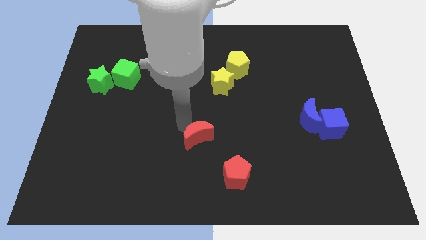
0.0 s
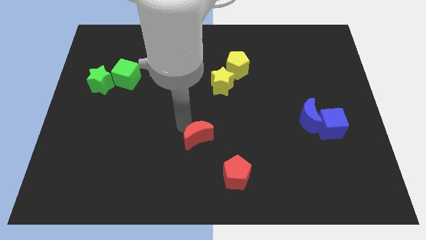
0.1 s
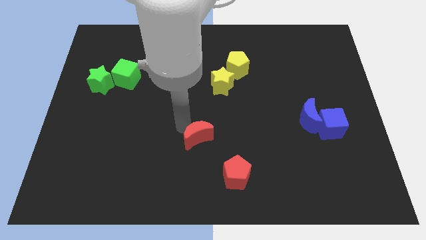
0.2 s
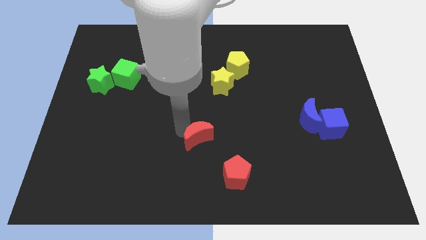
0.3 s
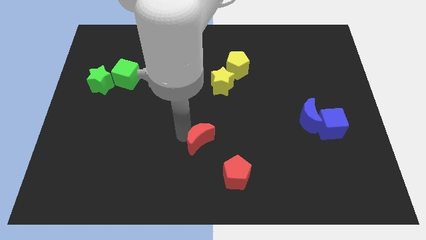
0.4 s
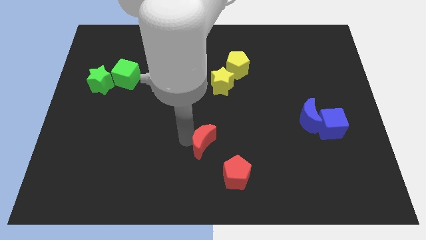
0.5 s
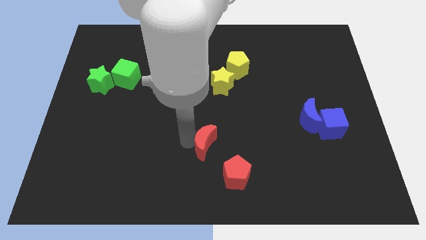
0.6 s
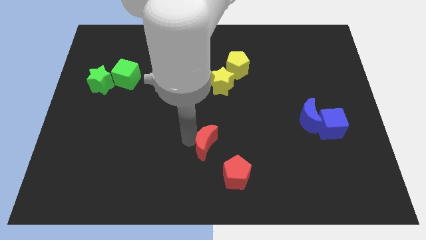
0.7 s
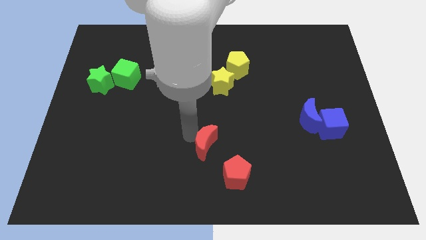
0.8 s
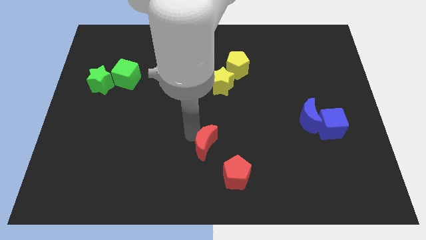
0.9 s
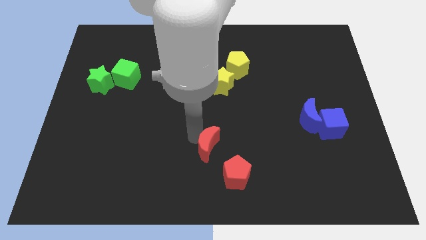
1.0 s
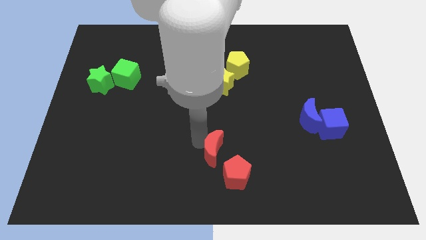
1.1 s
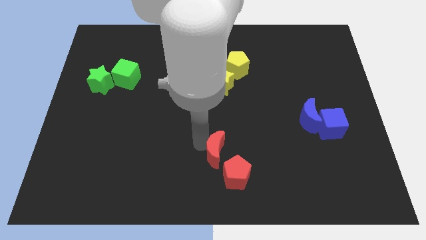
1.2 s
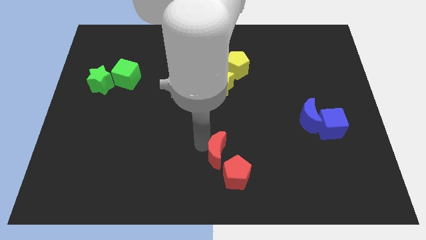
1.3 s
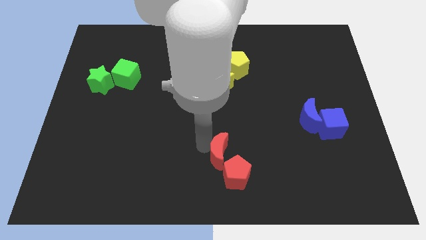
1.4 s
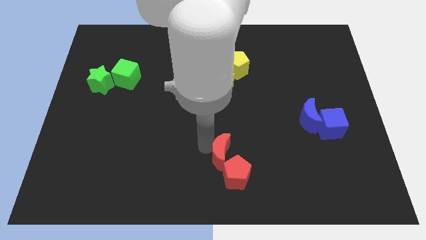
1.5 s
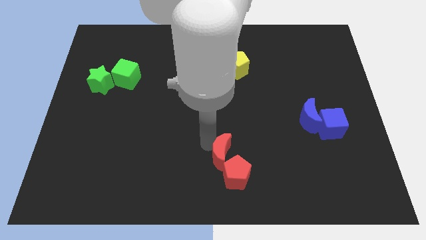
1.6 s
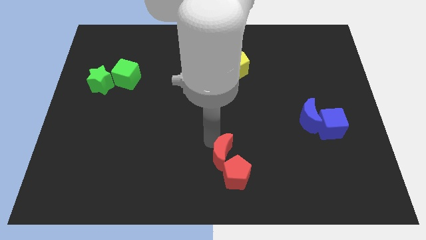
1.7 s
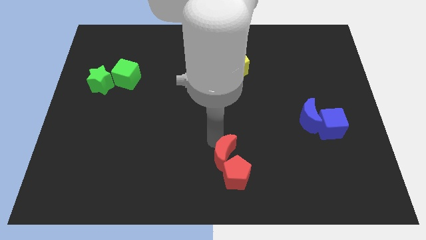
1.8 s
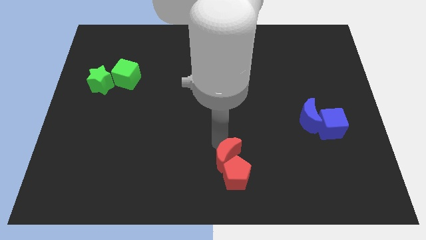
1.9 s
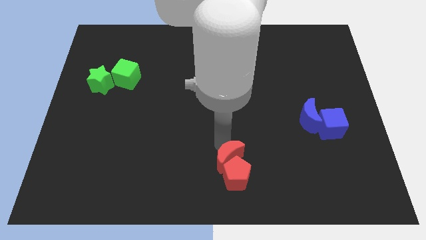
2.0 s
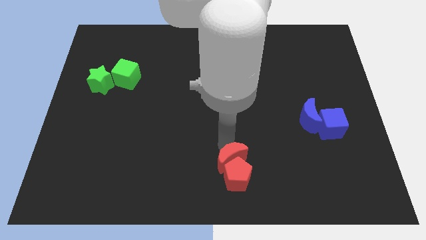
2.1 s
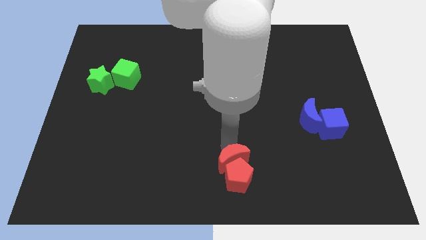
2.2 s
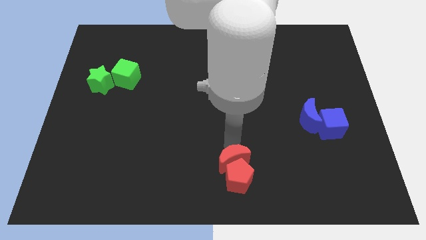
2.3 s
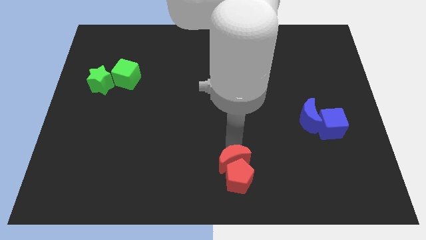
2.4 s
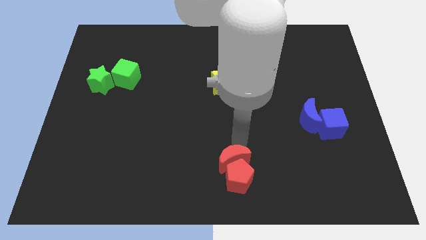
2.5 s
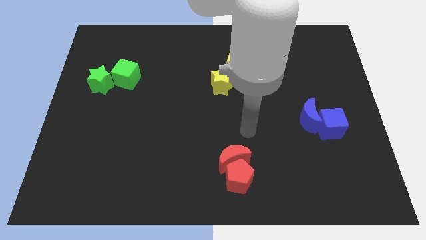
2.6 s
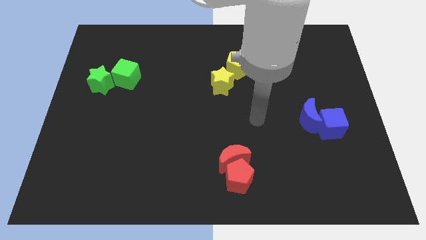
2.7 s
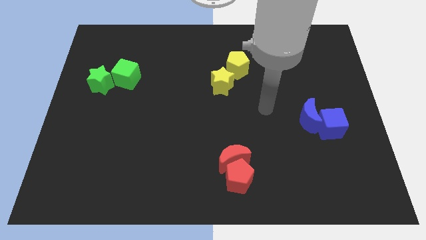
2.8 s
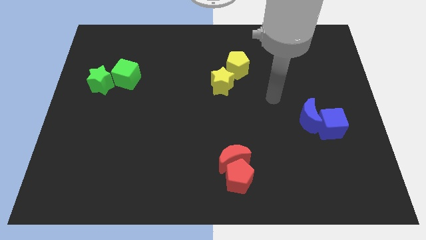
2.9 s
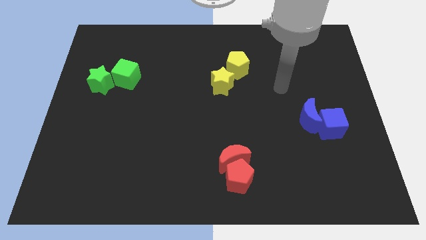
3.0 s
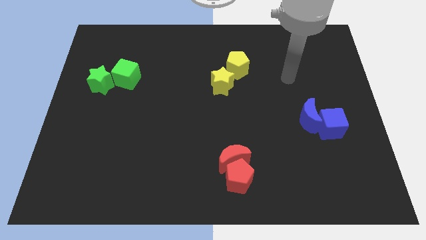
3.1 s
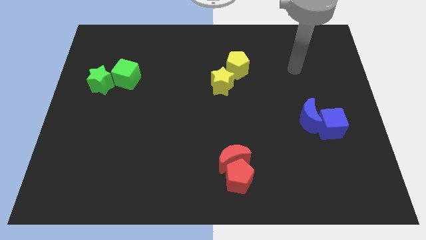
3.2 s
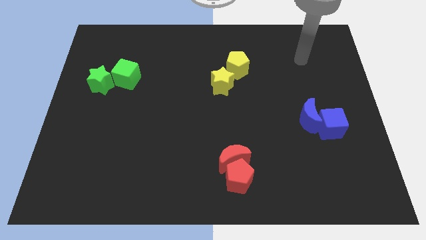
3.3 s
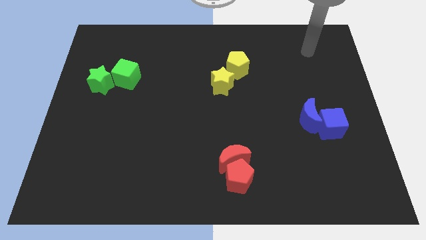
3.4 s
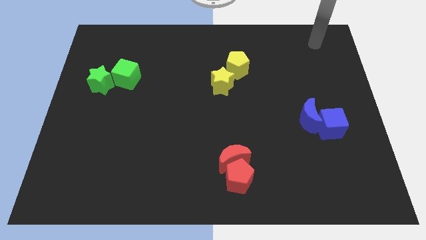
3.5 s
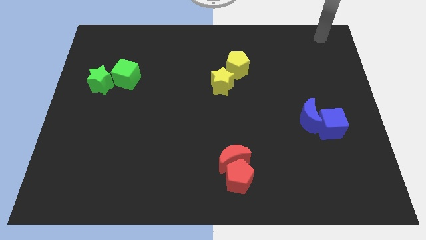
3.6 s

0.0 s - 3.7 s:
make a pair of blocks with red crescent and the red pentagon

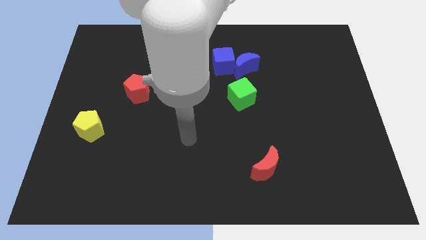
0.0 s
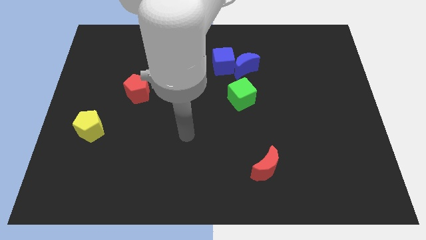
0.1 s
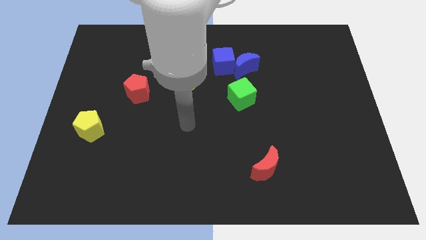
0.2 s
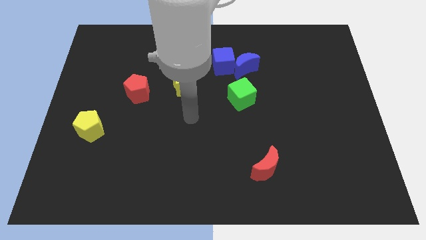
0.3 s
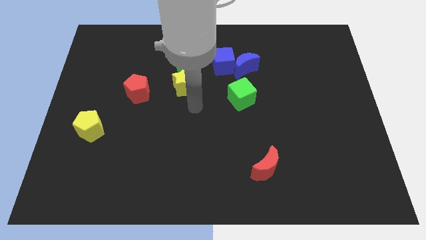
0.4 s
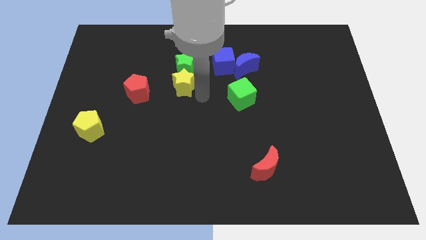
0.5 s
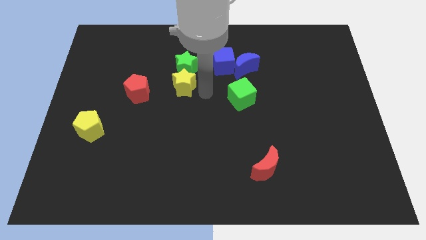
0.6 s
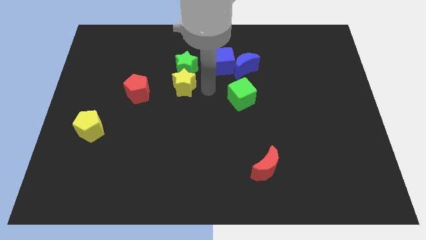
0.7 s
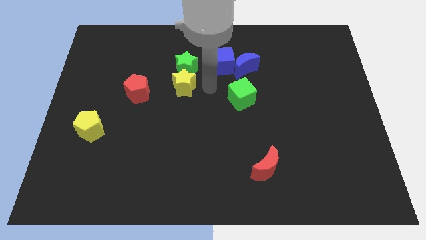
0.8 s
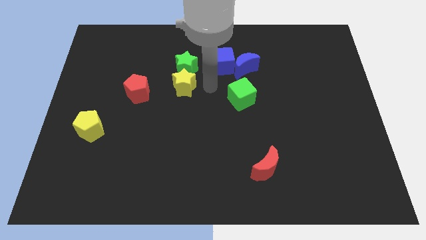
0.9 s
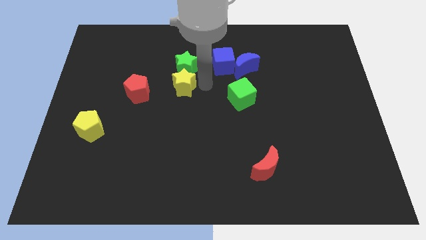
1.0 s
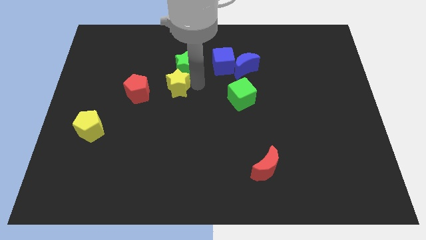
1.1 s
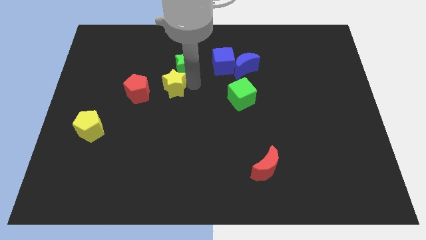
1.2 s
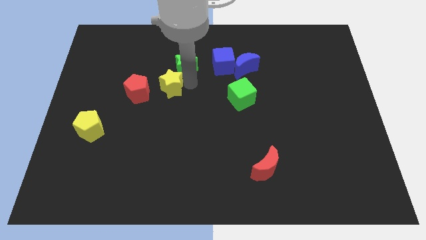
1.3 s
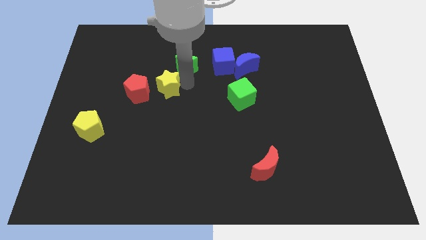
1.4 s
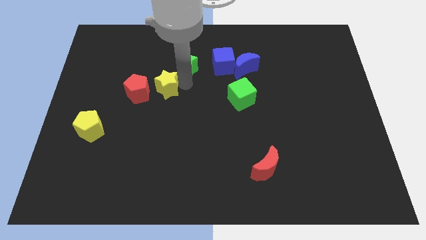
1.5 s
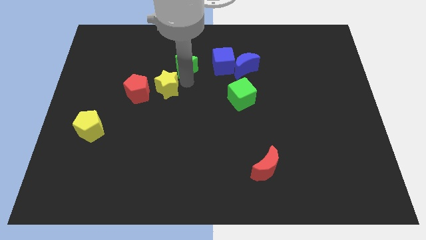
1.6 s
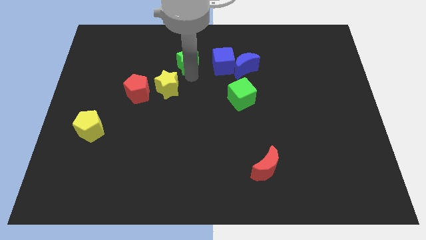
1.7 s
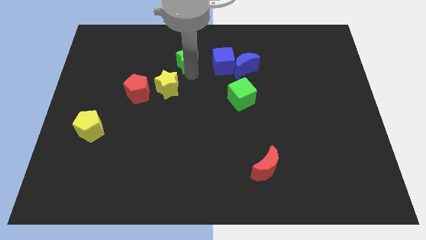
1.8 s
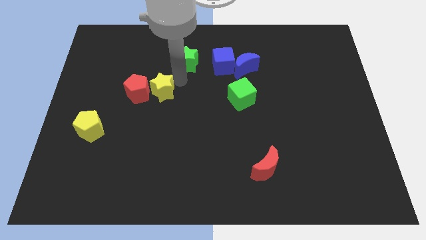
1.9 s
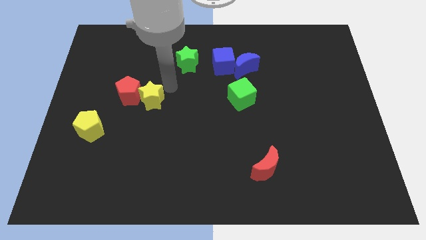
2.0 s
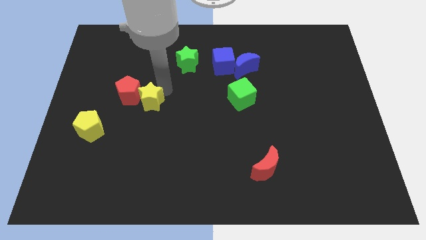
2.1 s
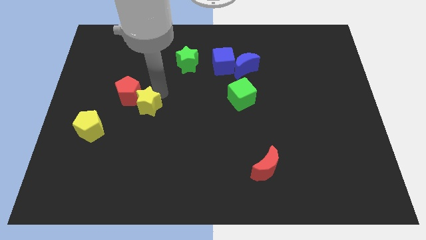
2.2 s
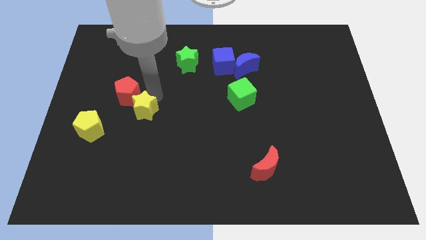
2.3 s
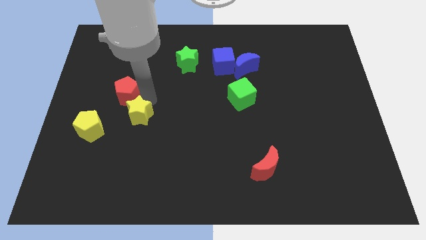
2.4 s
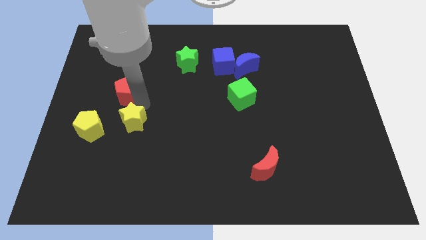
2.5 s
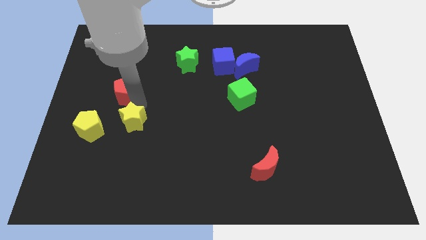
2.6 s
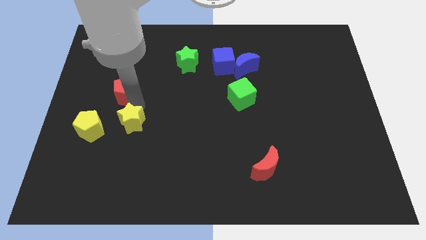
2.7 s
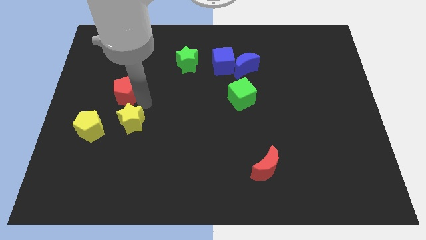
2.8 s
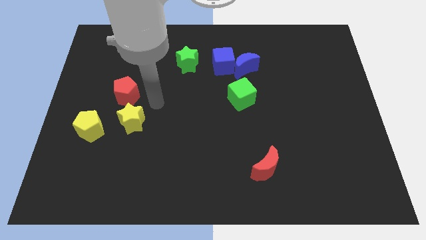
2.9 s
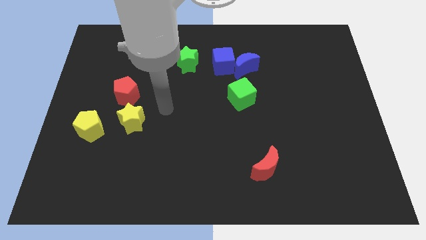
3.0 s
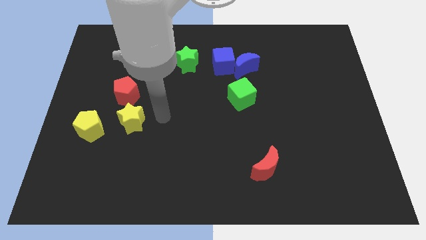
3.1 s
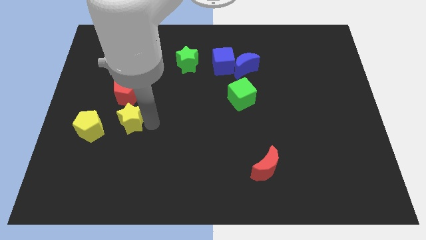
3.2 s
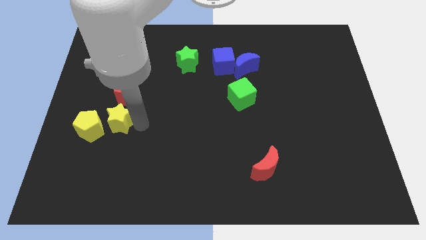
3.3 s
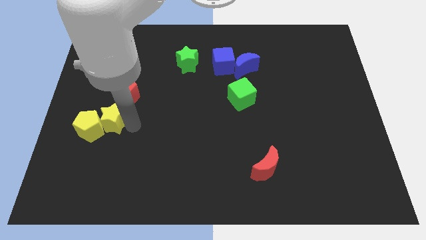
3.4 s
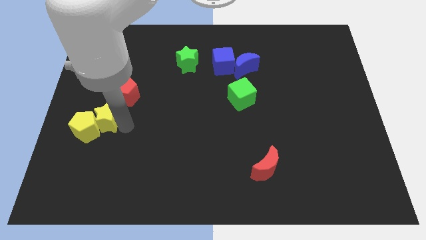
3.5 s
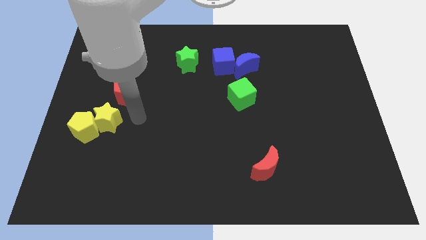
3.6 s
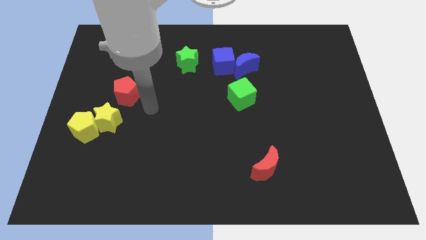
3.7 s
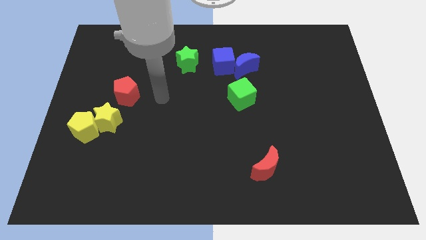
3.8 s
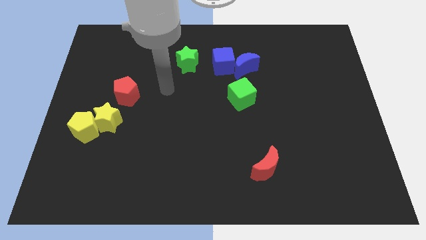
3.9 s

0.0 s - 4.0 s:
separate the yellow star from the green star

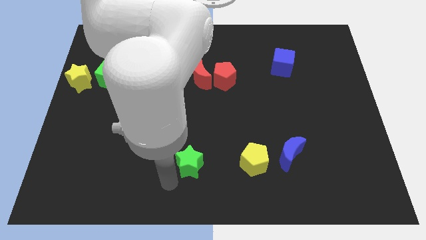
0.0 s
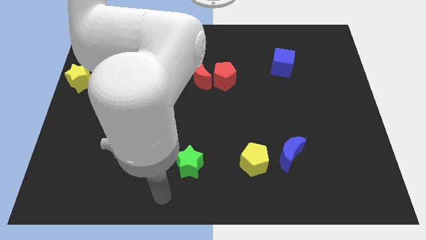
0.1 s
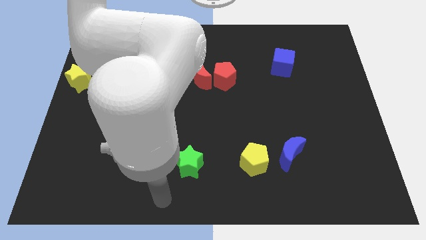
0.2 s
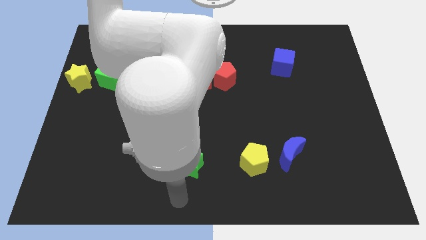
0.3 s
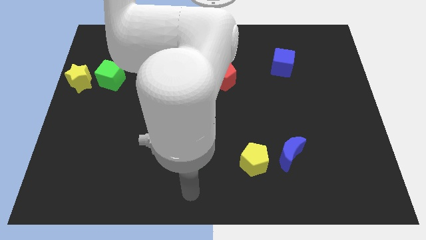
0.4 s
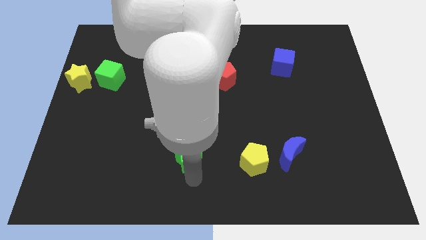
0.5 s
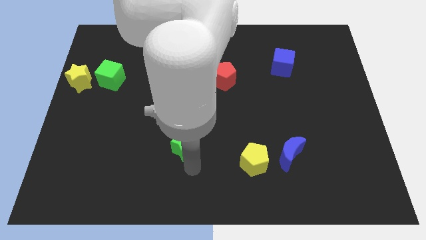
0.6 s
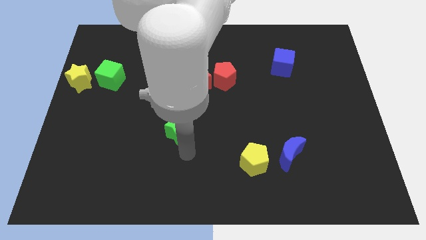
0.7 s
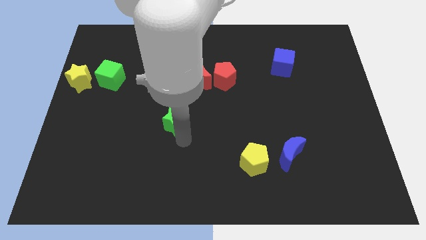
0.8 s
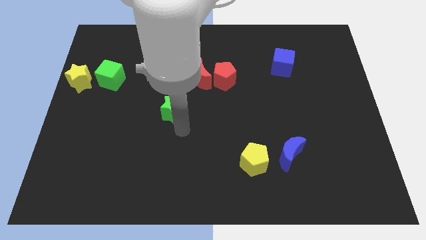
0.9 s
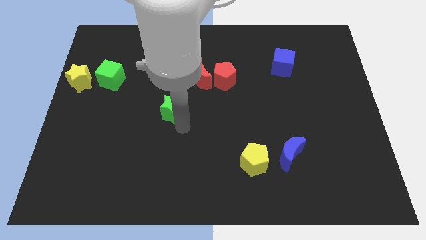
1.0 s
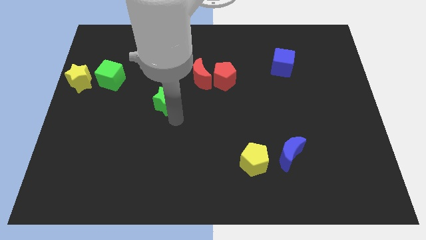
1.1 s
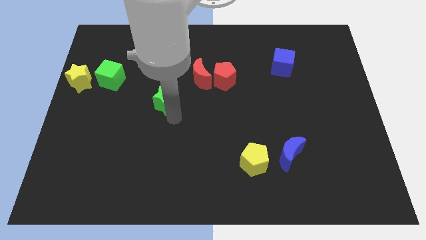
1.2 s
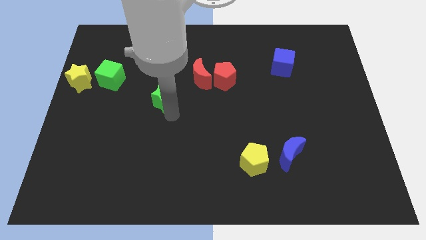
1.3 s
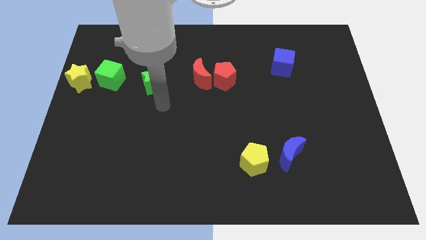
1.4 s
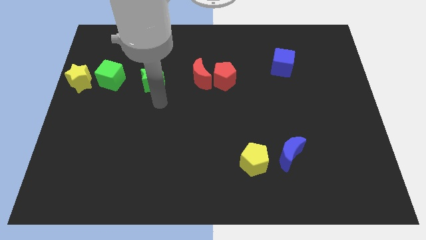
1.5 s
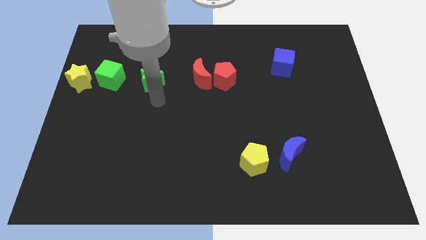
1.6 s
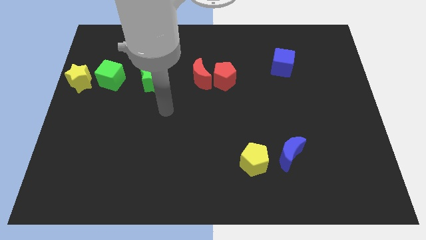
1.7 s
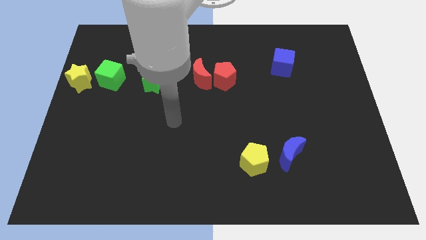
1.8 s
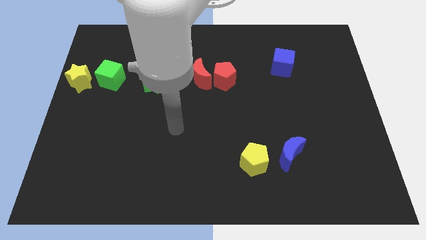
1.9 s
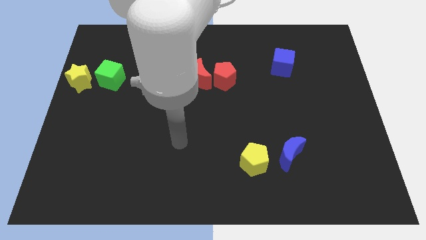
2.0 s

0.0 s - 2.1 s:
push green star up to the right of green cube
